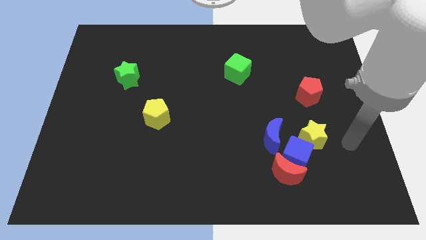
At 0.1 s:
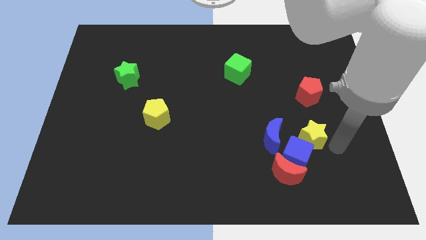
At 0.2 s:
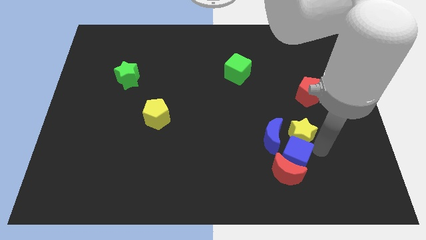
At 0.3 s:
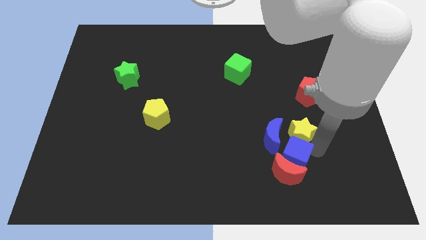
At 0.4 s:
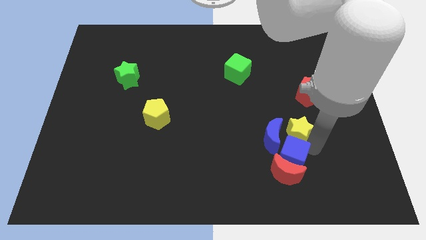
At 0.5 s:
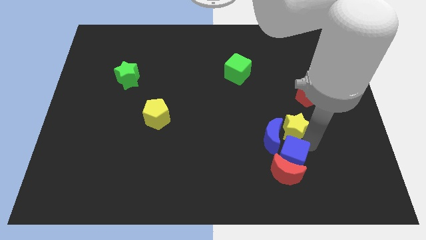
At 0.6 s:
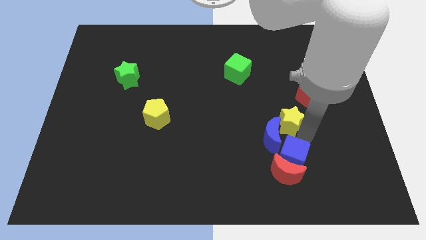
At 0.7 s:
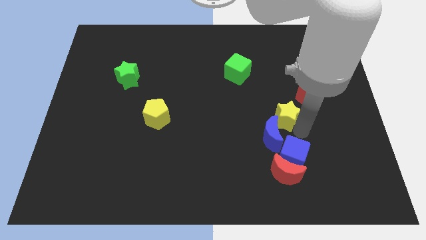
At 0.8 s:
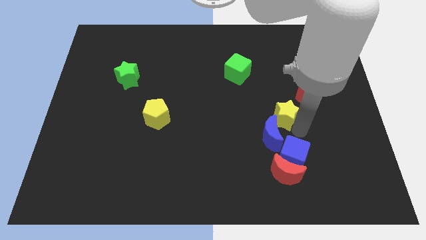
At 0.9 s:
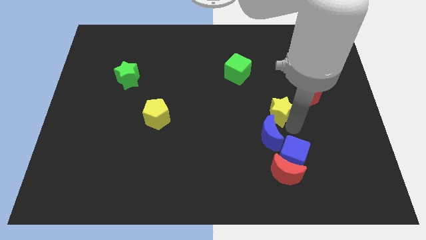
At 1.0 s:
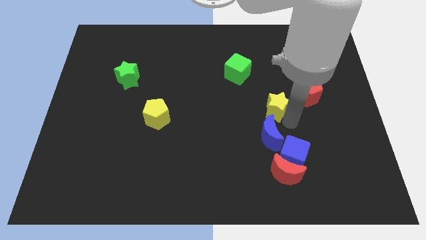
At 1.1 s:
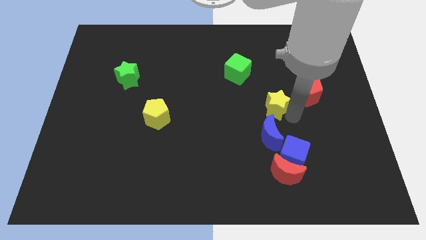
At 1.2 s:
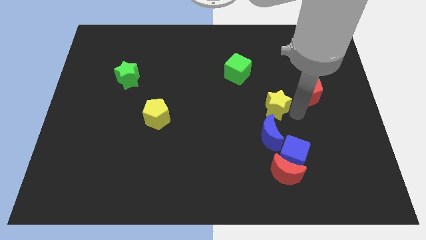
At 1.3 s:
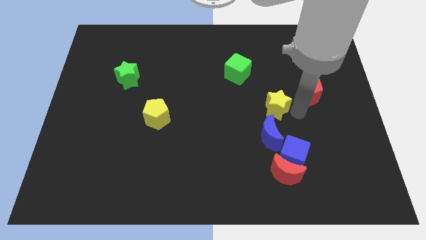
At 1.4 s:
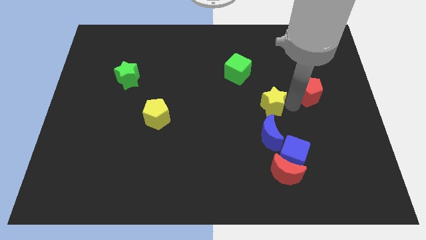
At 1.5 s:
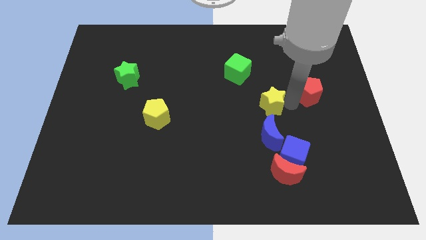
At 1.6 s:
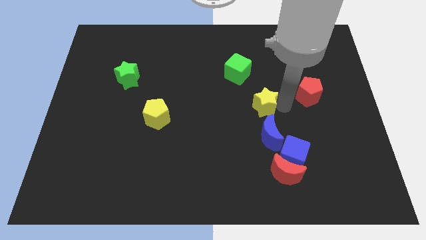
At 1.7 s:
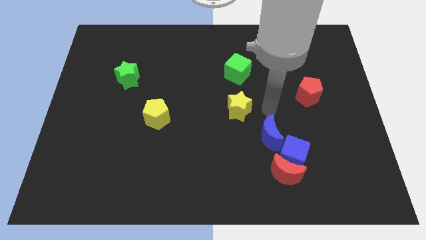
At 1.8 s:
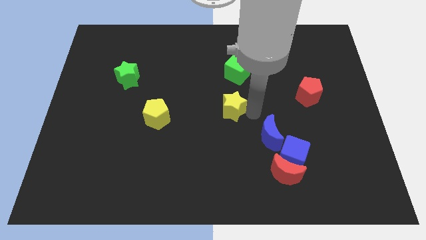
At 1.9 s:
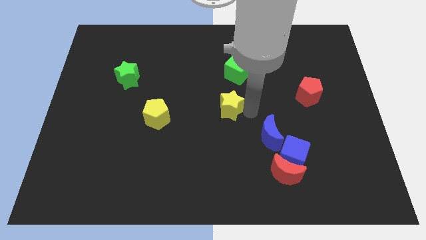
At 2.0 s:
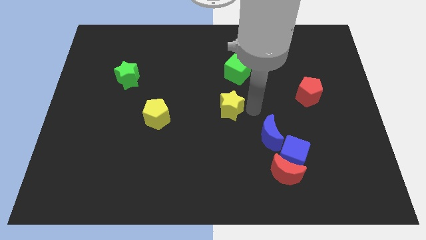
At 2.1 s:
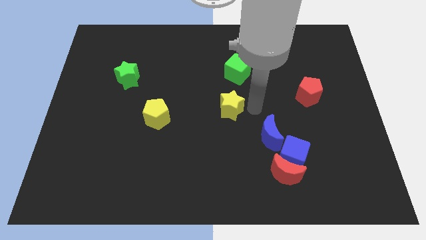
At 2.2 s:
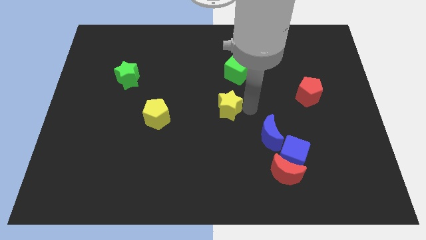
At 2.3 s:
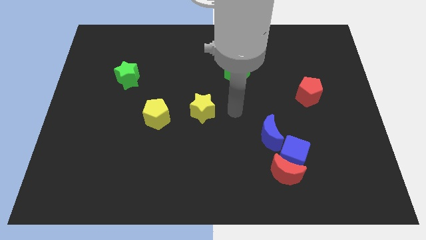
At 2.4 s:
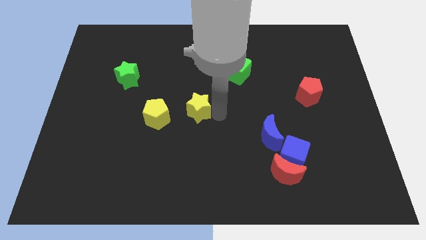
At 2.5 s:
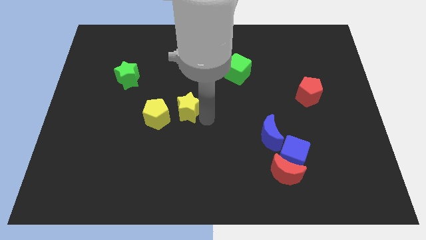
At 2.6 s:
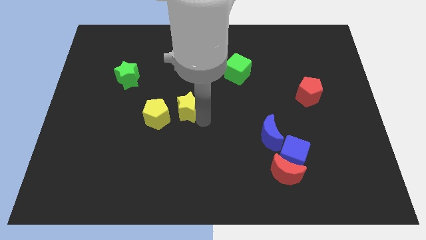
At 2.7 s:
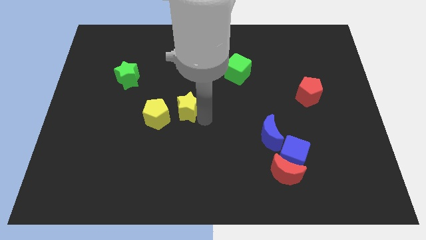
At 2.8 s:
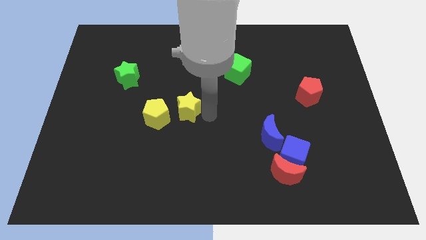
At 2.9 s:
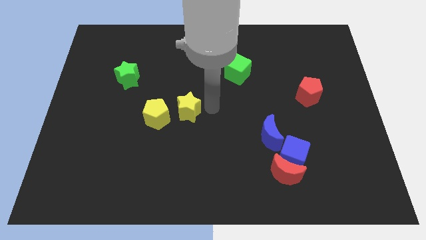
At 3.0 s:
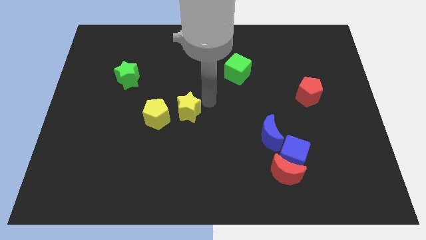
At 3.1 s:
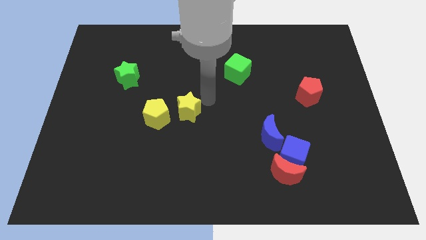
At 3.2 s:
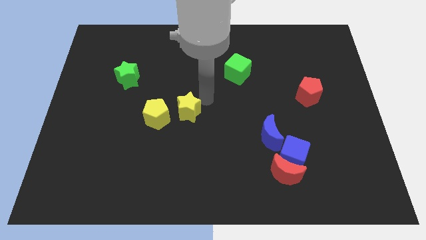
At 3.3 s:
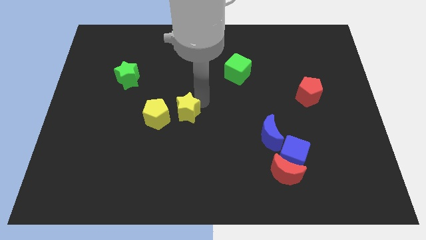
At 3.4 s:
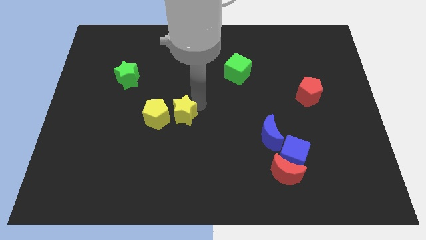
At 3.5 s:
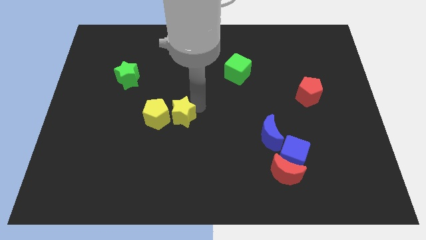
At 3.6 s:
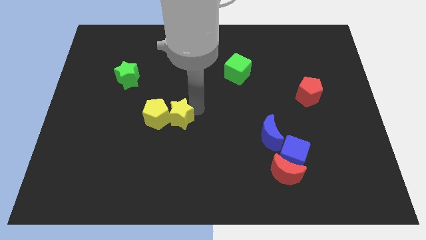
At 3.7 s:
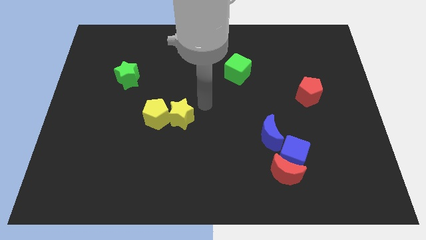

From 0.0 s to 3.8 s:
move the yellow star close to the yellow pentagon

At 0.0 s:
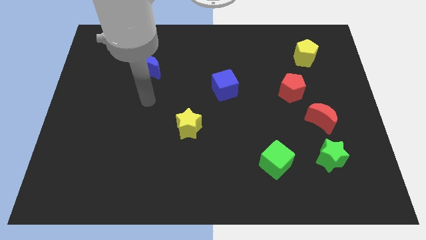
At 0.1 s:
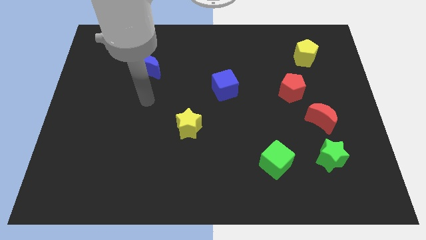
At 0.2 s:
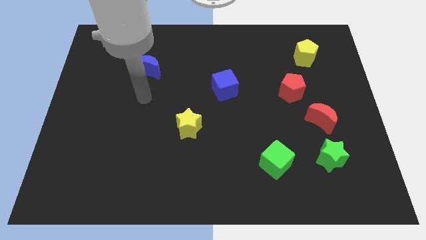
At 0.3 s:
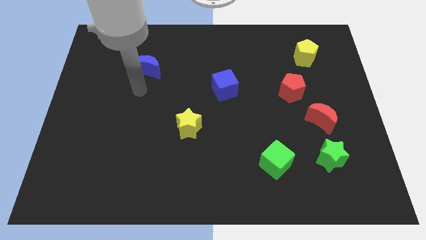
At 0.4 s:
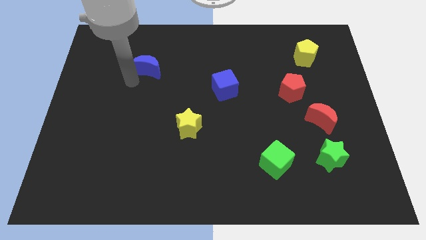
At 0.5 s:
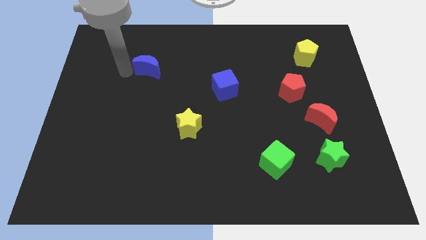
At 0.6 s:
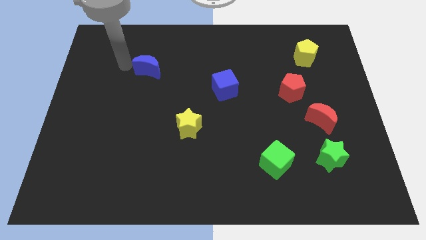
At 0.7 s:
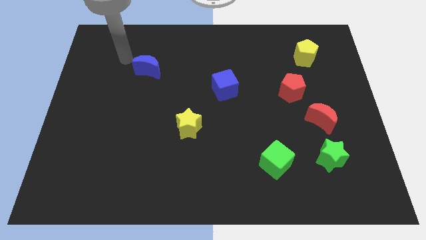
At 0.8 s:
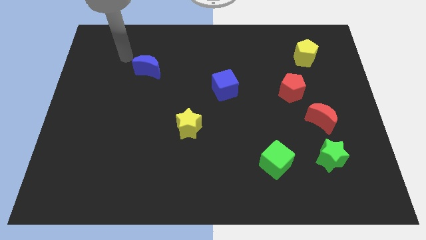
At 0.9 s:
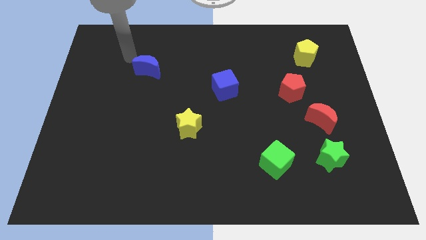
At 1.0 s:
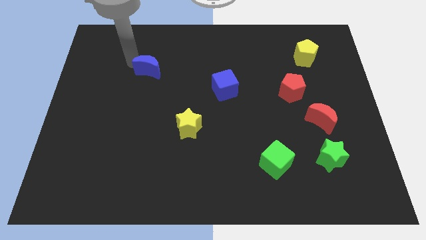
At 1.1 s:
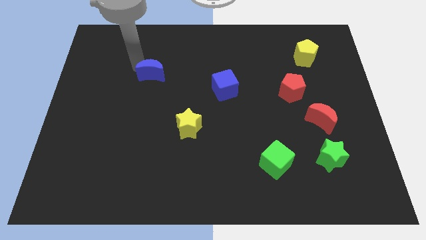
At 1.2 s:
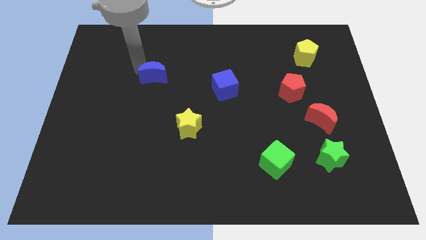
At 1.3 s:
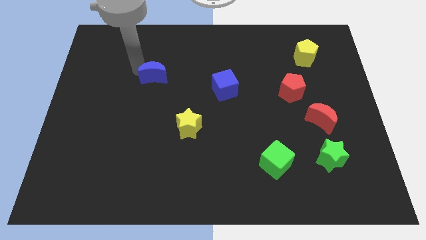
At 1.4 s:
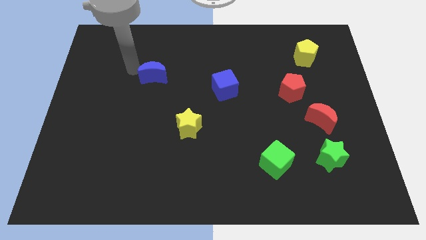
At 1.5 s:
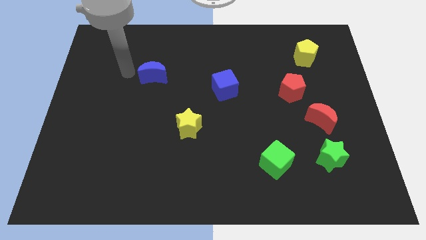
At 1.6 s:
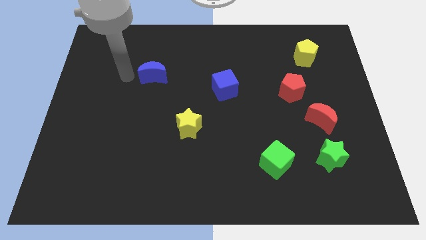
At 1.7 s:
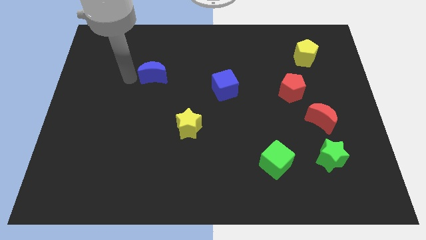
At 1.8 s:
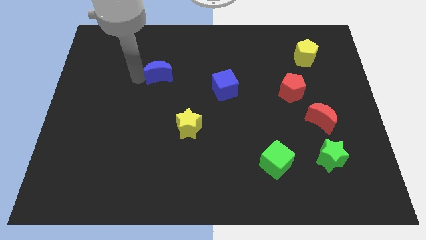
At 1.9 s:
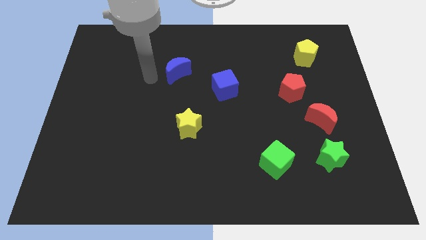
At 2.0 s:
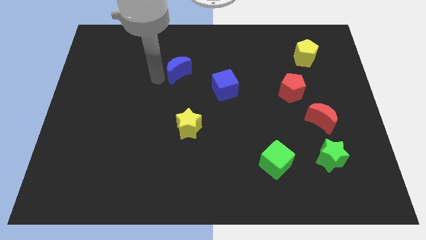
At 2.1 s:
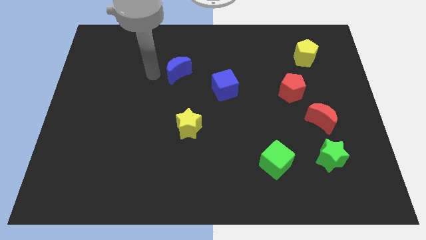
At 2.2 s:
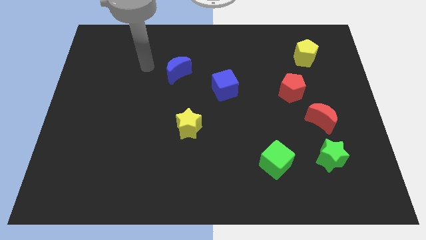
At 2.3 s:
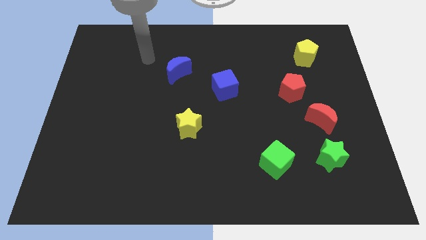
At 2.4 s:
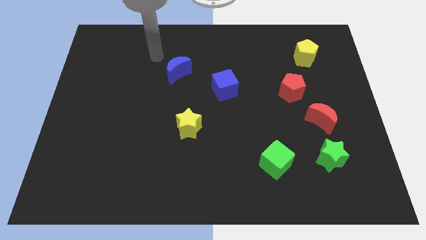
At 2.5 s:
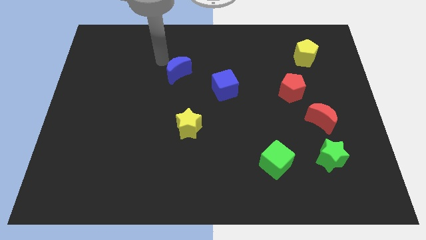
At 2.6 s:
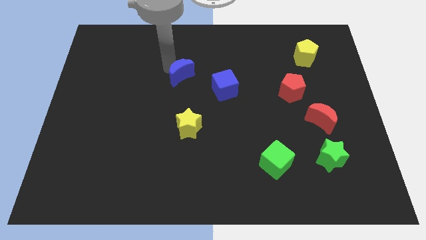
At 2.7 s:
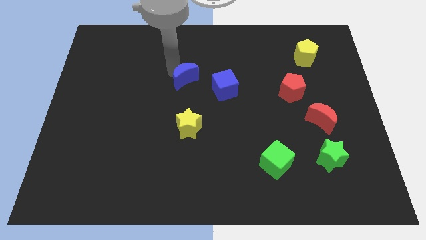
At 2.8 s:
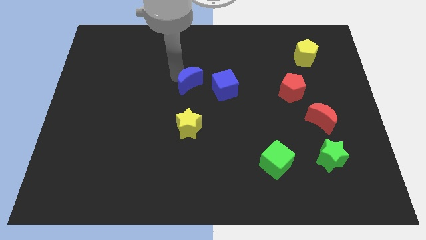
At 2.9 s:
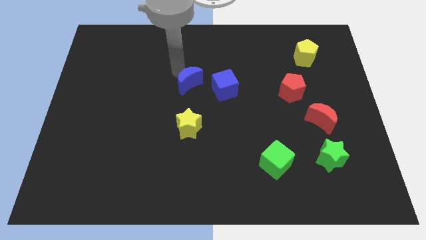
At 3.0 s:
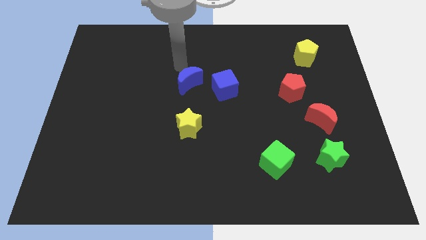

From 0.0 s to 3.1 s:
push the blue moon towards the blue cube

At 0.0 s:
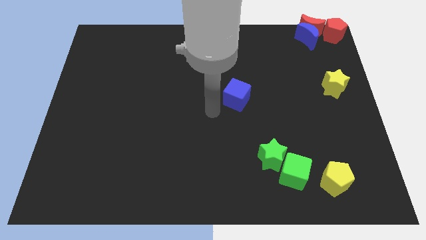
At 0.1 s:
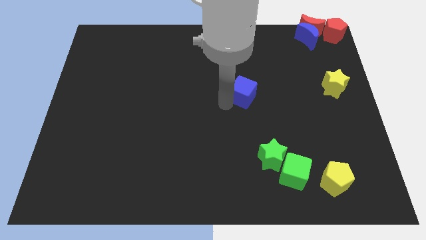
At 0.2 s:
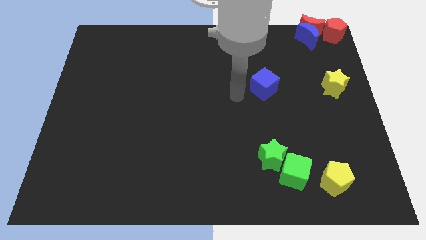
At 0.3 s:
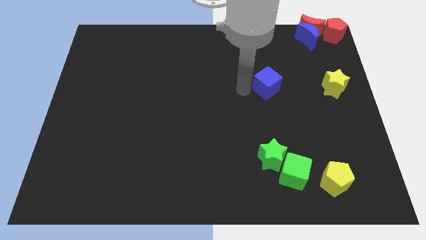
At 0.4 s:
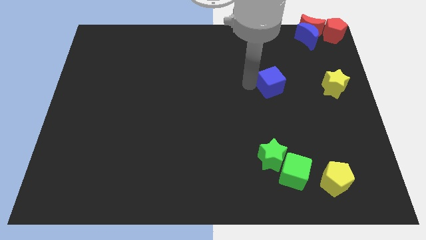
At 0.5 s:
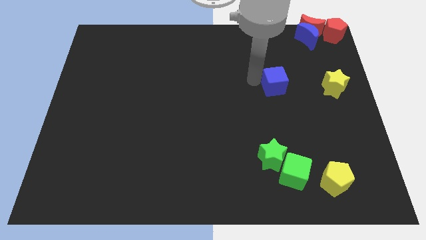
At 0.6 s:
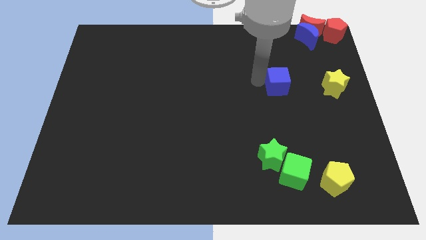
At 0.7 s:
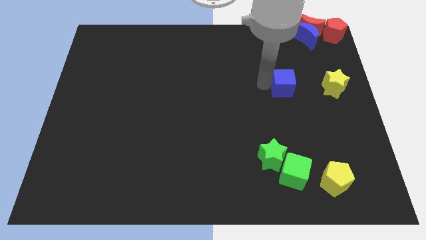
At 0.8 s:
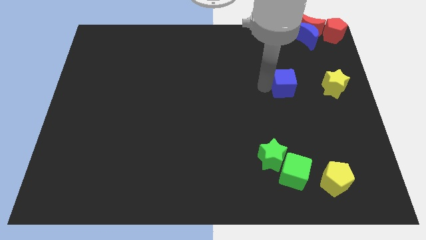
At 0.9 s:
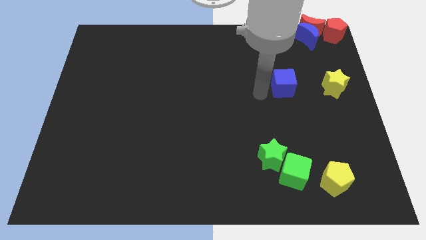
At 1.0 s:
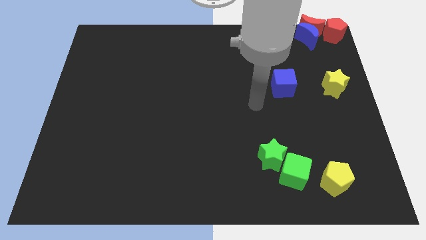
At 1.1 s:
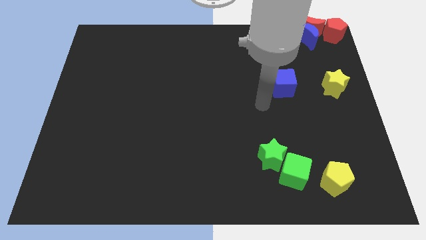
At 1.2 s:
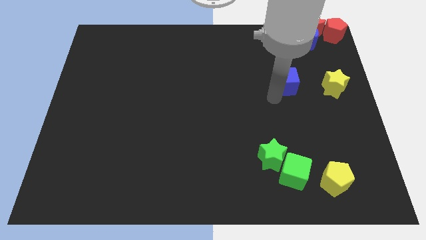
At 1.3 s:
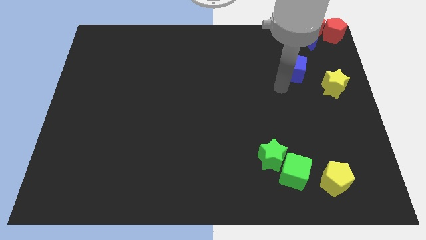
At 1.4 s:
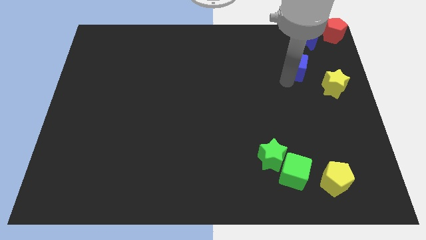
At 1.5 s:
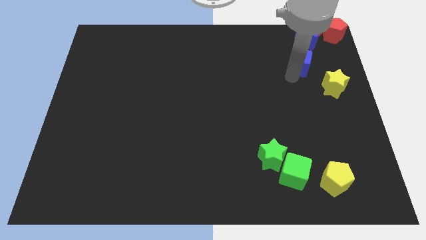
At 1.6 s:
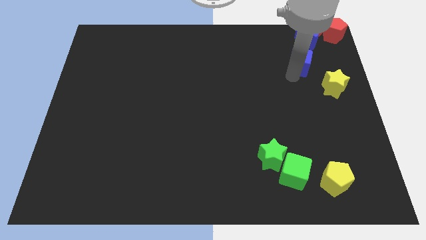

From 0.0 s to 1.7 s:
place blue cube to the bottom of the blue moon

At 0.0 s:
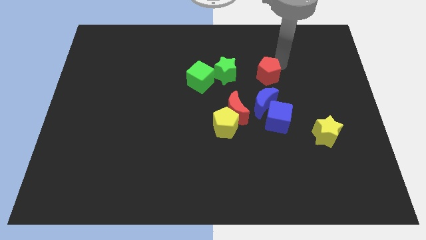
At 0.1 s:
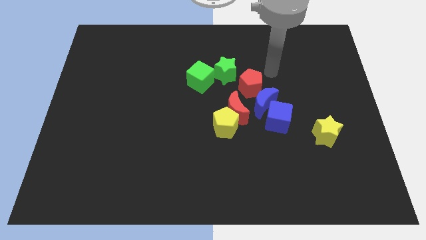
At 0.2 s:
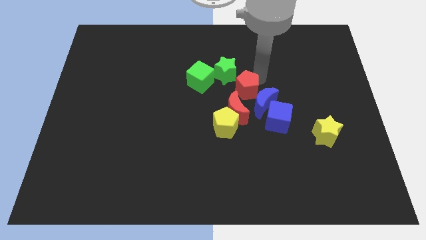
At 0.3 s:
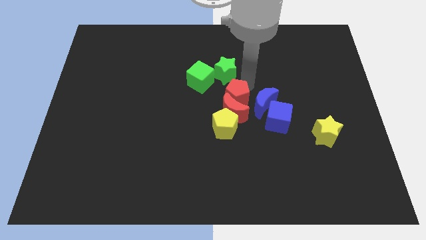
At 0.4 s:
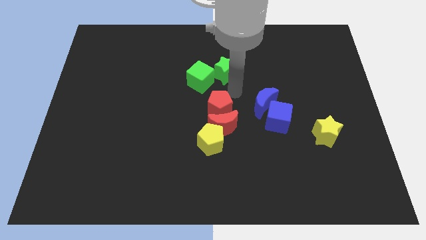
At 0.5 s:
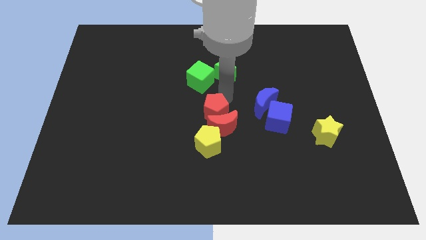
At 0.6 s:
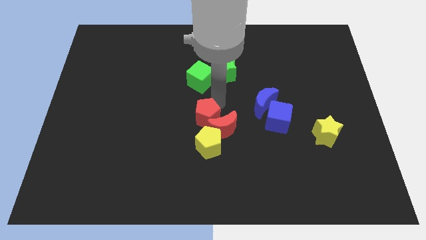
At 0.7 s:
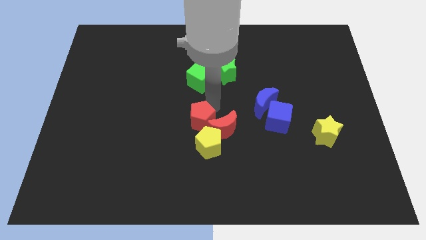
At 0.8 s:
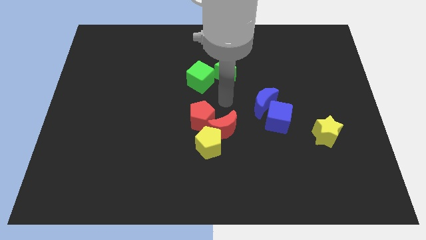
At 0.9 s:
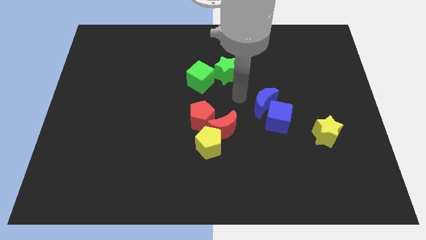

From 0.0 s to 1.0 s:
push the red pentagon above the red crescent
